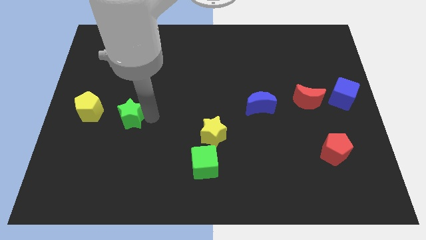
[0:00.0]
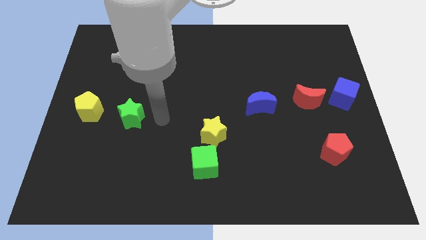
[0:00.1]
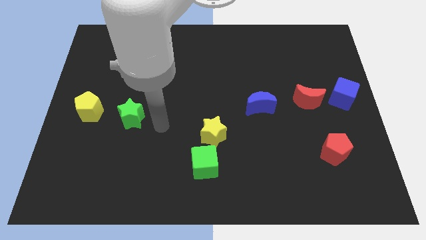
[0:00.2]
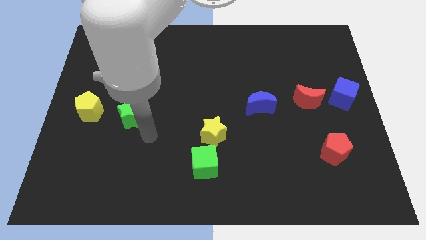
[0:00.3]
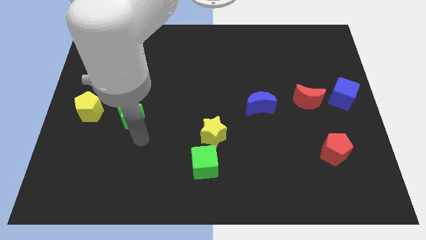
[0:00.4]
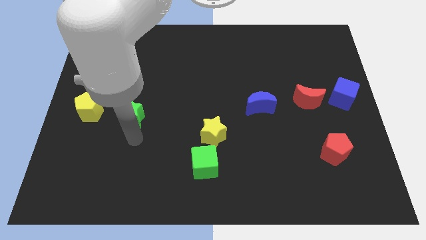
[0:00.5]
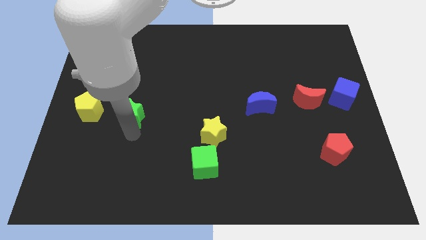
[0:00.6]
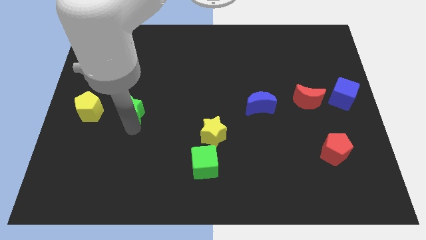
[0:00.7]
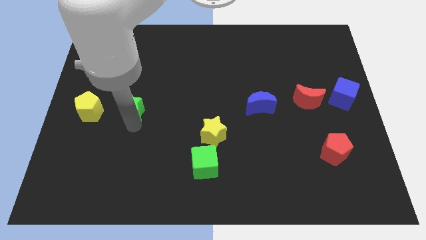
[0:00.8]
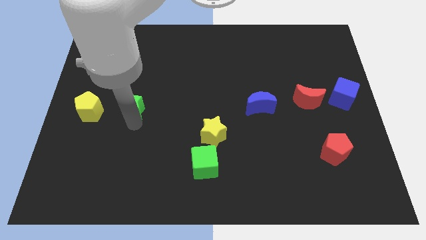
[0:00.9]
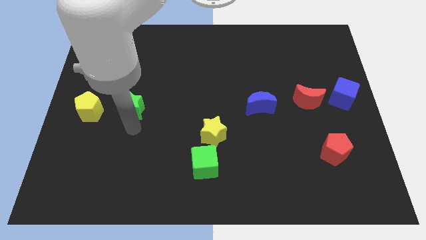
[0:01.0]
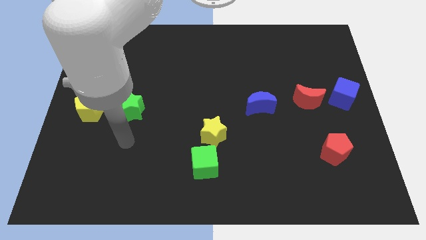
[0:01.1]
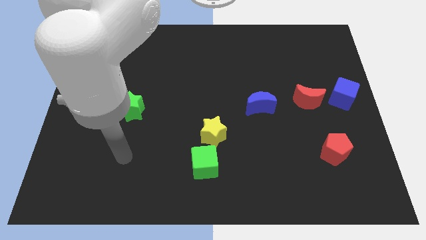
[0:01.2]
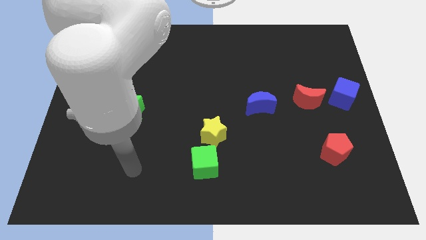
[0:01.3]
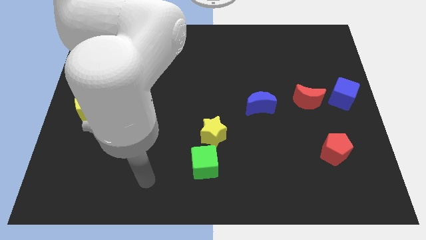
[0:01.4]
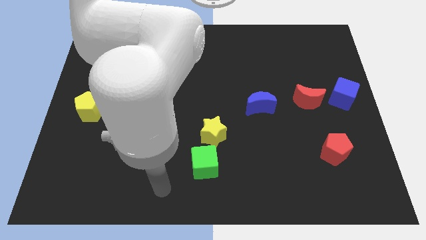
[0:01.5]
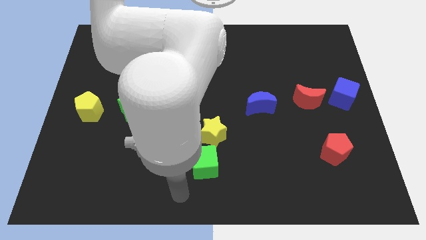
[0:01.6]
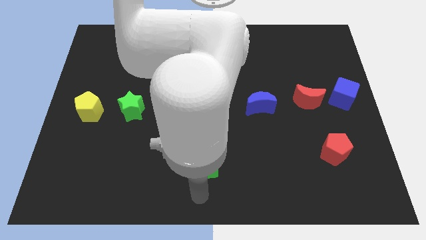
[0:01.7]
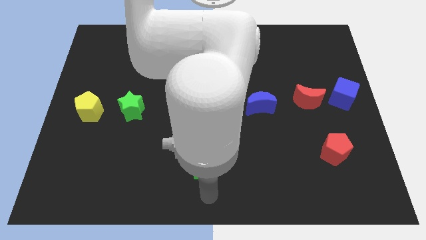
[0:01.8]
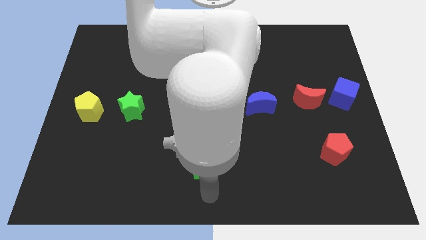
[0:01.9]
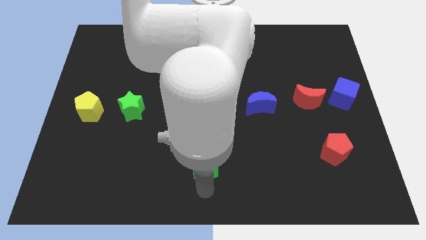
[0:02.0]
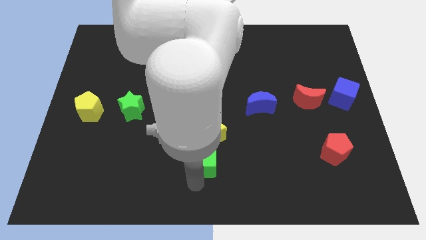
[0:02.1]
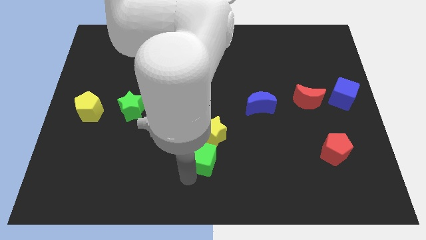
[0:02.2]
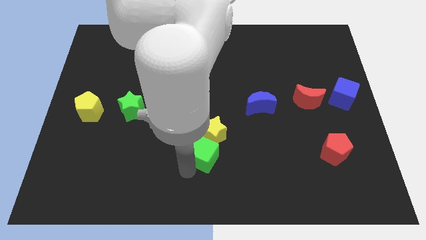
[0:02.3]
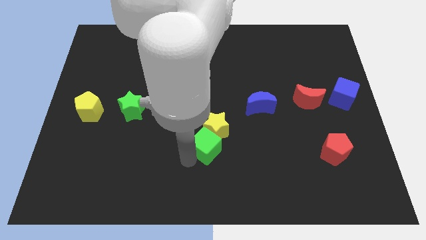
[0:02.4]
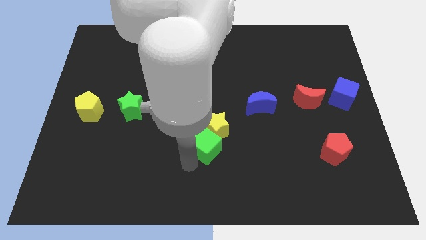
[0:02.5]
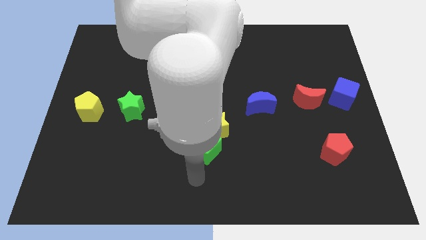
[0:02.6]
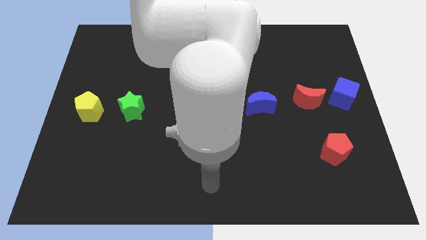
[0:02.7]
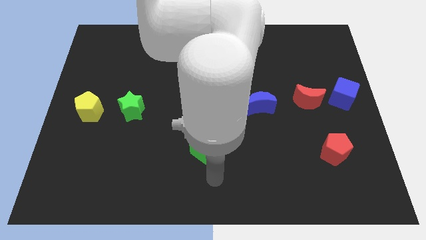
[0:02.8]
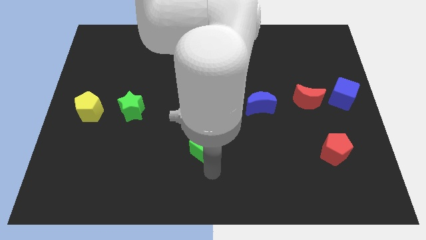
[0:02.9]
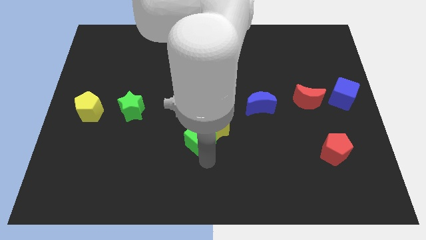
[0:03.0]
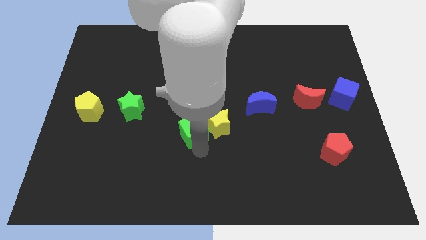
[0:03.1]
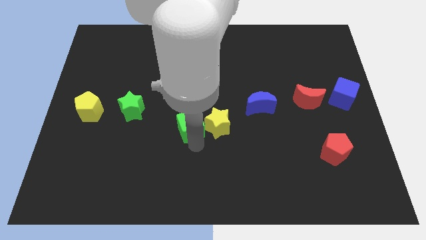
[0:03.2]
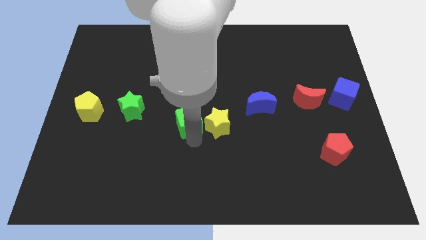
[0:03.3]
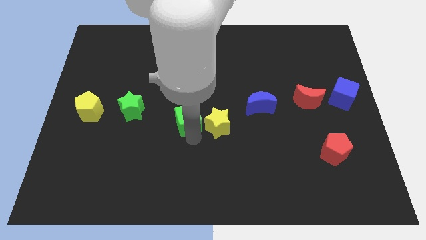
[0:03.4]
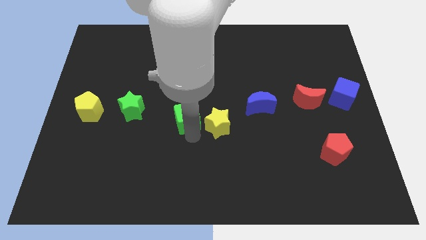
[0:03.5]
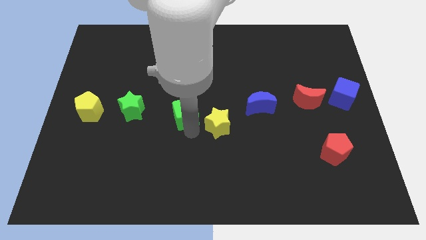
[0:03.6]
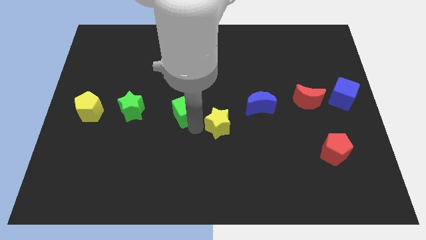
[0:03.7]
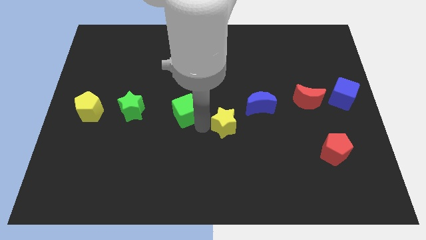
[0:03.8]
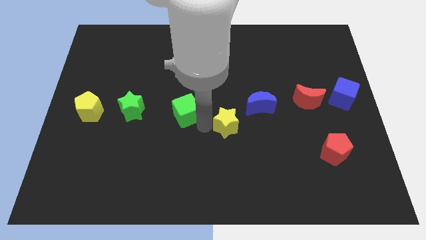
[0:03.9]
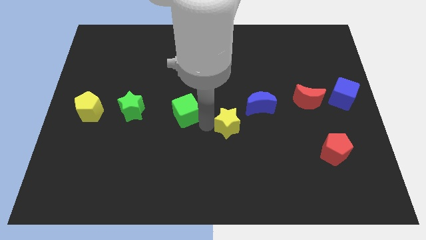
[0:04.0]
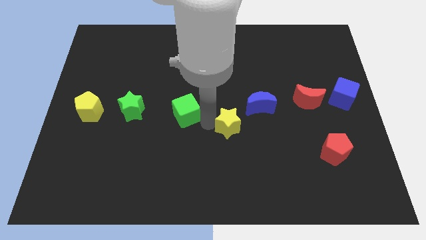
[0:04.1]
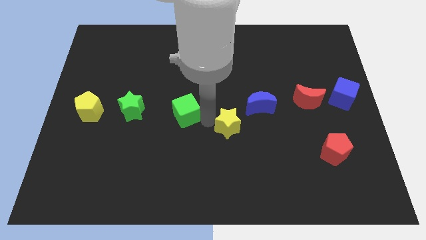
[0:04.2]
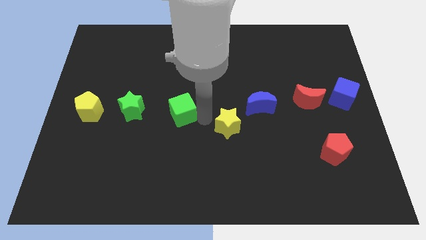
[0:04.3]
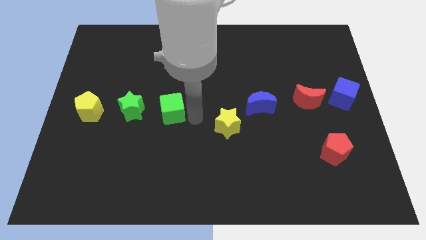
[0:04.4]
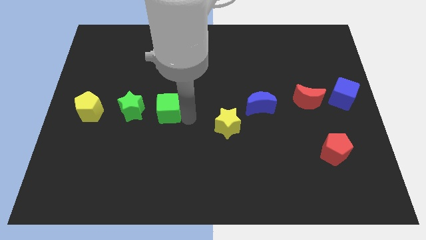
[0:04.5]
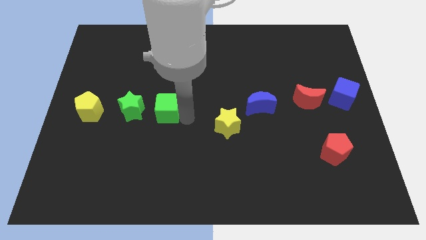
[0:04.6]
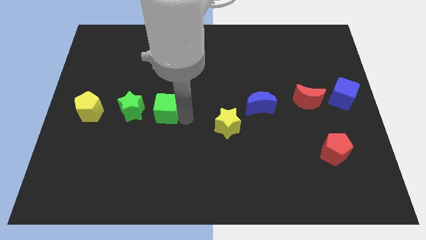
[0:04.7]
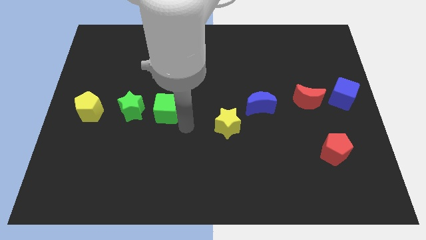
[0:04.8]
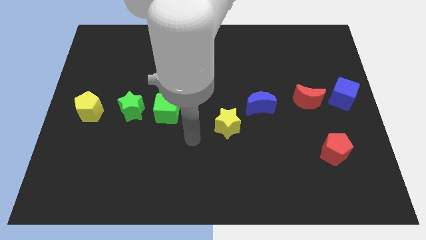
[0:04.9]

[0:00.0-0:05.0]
move the green cube to the right of the green star

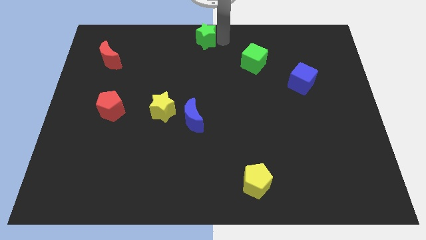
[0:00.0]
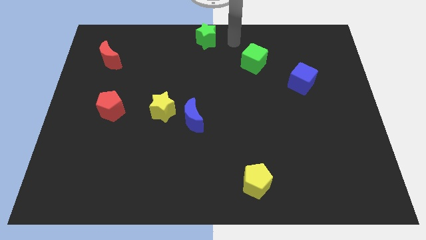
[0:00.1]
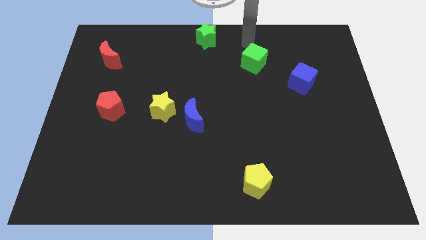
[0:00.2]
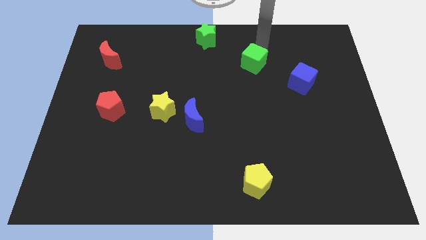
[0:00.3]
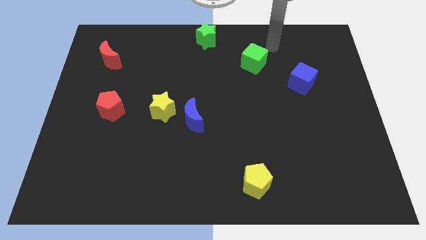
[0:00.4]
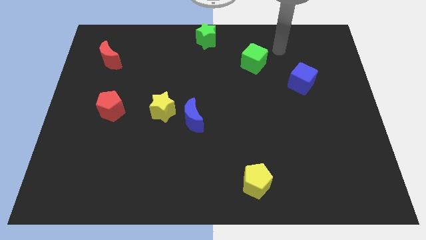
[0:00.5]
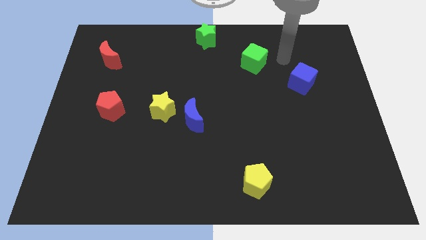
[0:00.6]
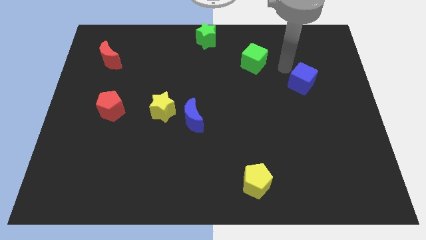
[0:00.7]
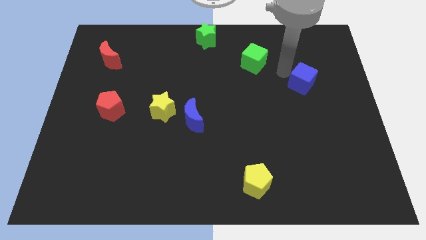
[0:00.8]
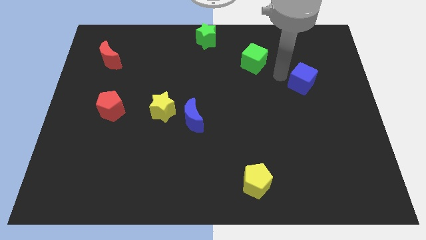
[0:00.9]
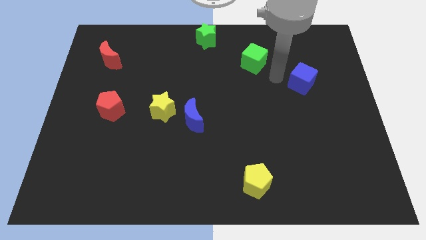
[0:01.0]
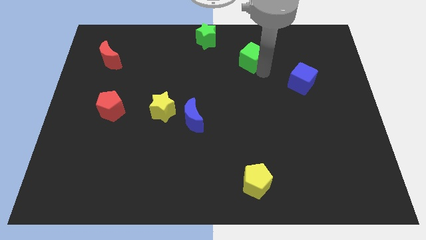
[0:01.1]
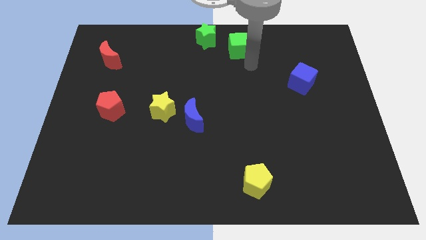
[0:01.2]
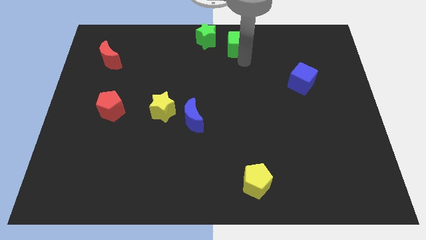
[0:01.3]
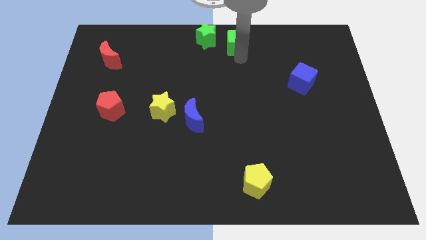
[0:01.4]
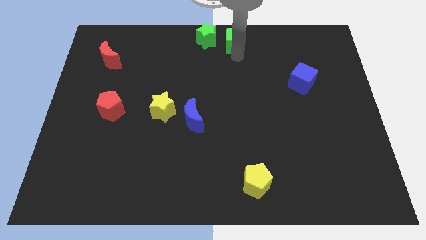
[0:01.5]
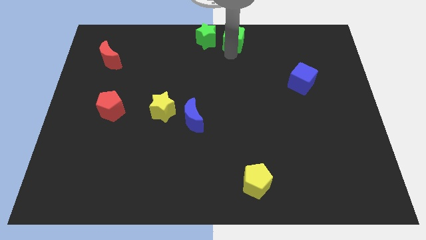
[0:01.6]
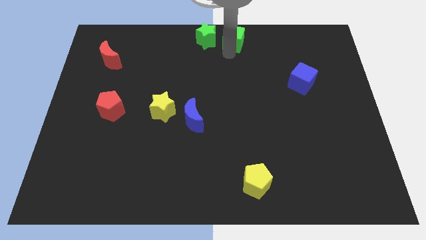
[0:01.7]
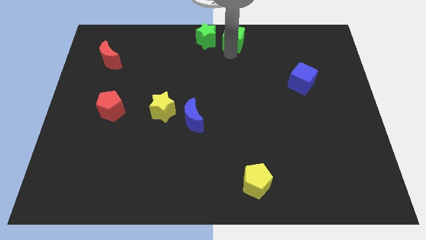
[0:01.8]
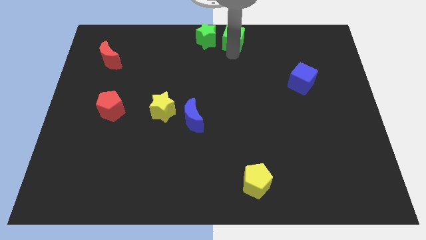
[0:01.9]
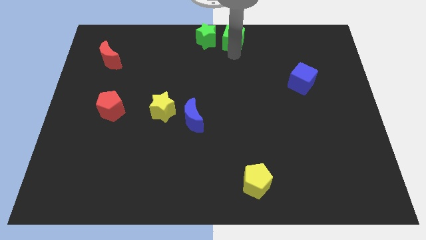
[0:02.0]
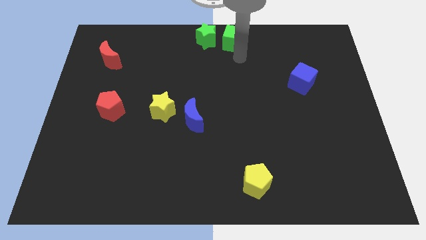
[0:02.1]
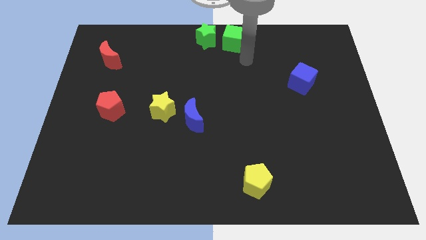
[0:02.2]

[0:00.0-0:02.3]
place green cube to the right of green star

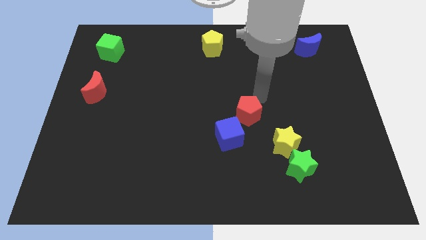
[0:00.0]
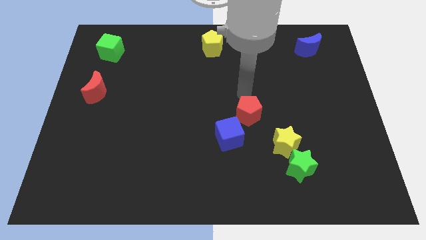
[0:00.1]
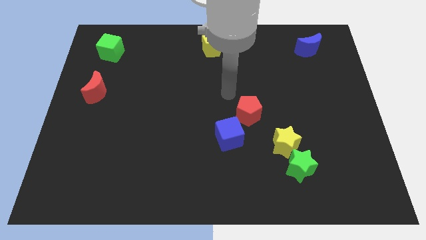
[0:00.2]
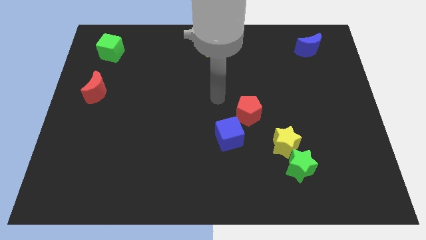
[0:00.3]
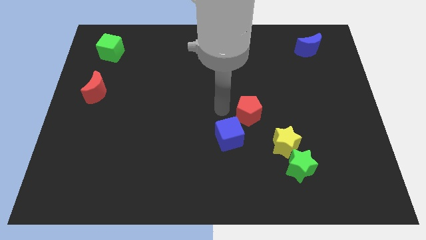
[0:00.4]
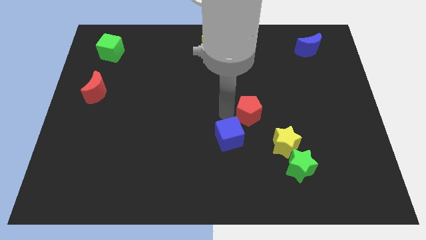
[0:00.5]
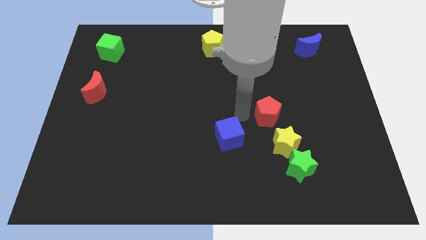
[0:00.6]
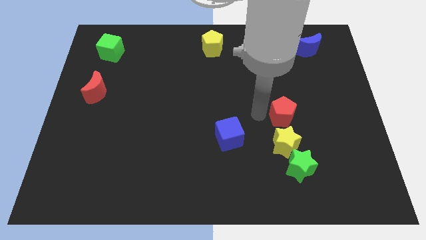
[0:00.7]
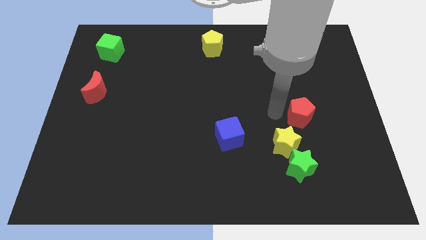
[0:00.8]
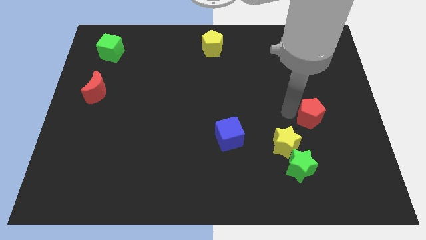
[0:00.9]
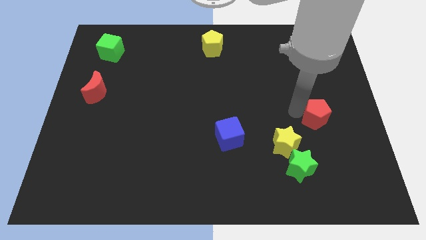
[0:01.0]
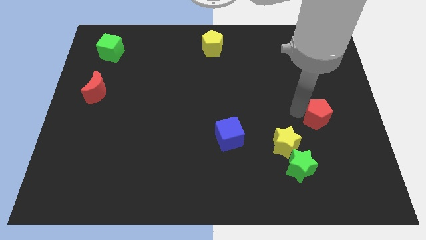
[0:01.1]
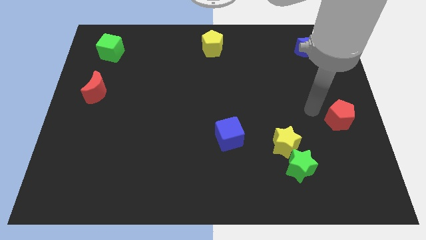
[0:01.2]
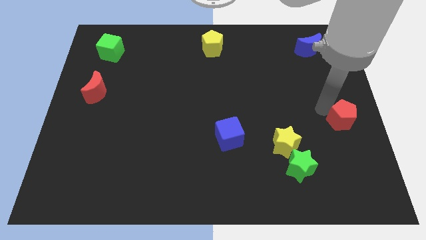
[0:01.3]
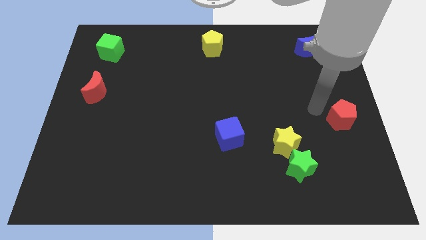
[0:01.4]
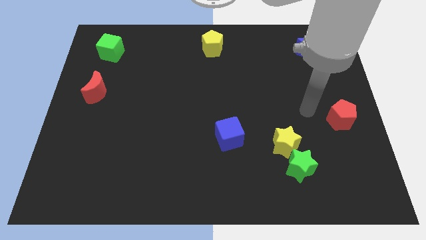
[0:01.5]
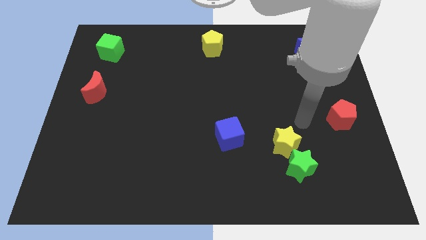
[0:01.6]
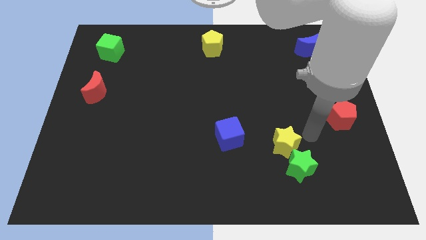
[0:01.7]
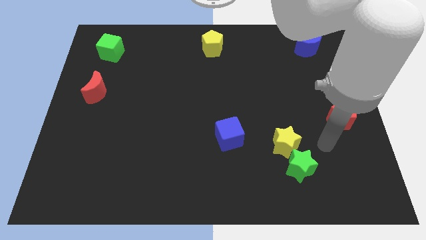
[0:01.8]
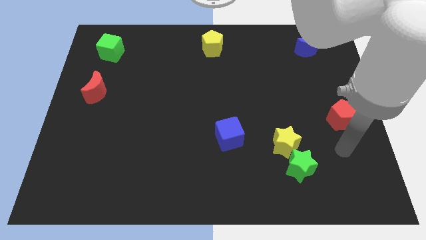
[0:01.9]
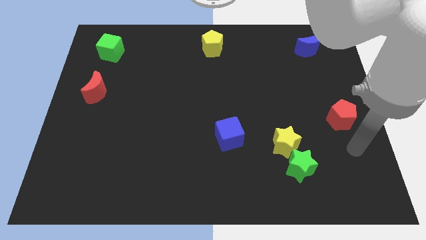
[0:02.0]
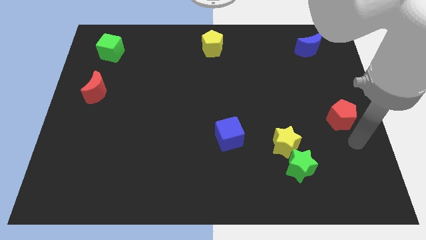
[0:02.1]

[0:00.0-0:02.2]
move red pentagon to the center right
